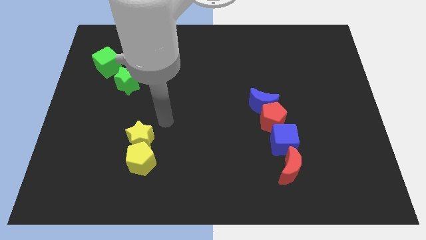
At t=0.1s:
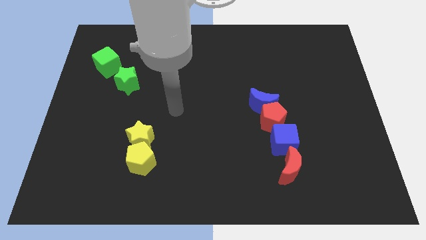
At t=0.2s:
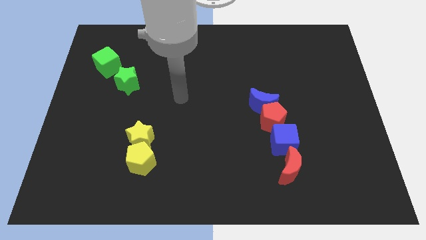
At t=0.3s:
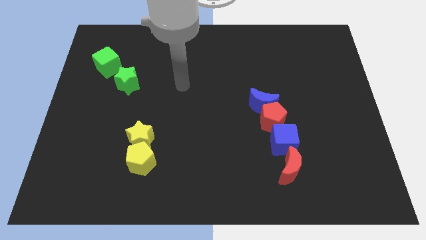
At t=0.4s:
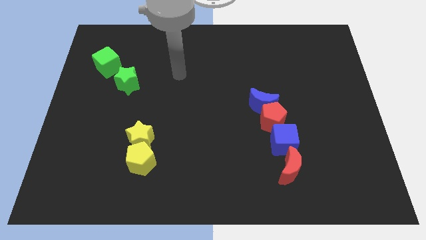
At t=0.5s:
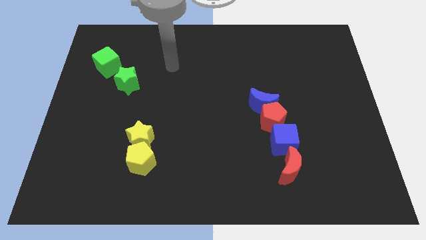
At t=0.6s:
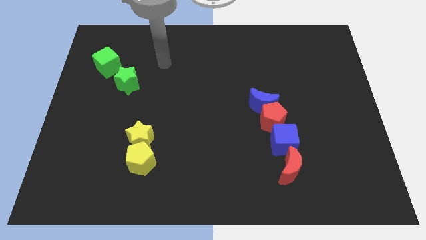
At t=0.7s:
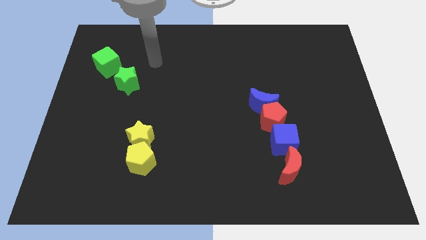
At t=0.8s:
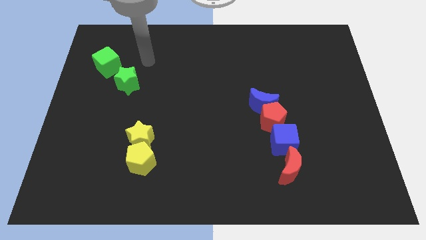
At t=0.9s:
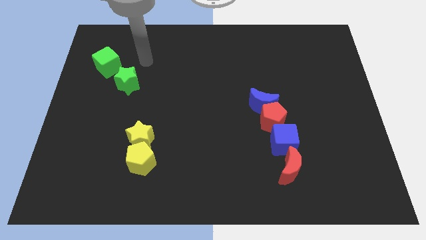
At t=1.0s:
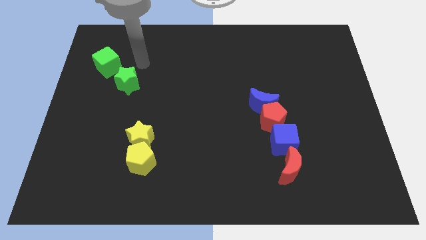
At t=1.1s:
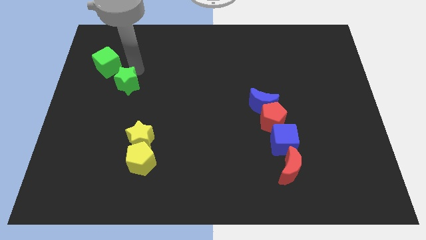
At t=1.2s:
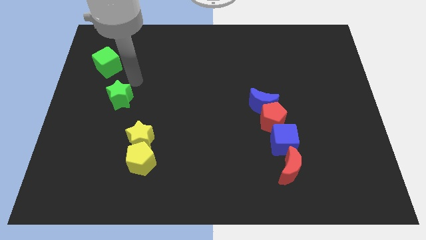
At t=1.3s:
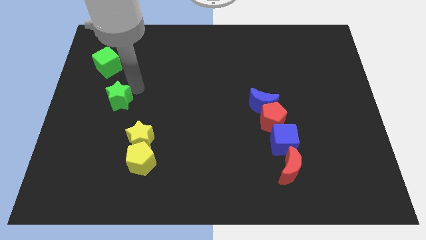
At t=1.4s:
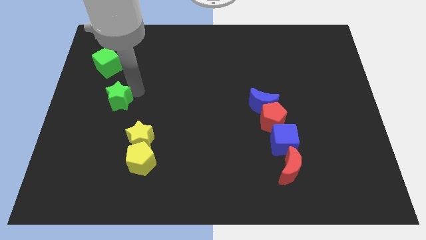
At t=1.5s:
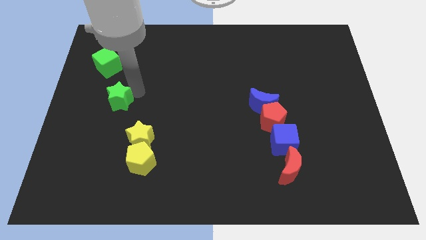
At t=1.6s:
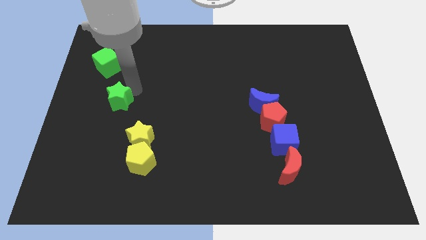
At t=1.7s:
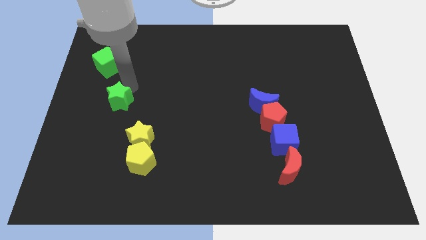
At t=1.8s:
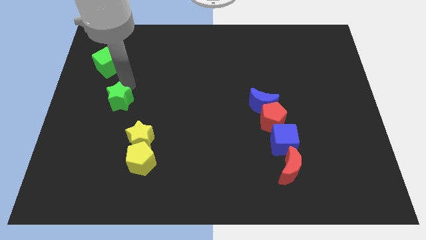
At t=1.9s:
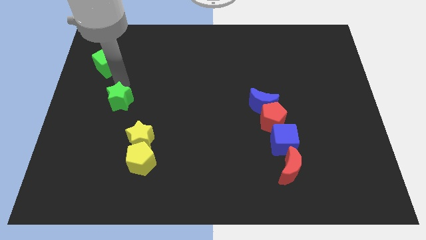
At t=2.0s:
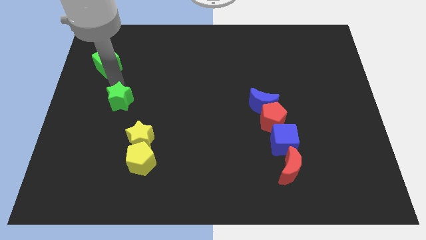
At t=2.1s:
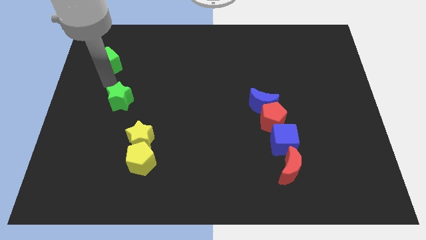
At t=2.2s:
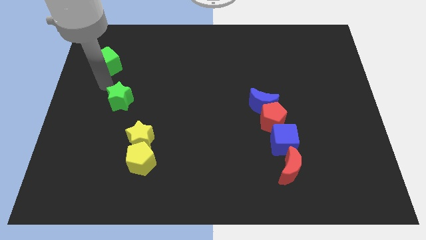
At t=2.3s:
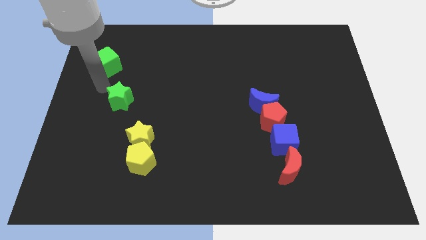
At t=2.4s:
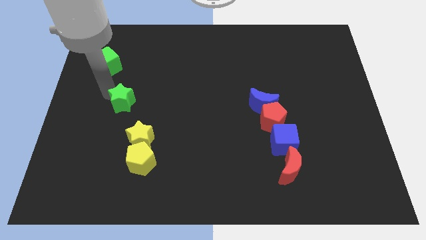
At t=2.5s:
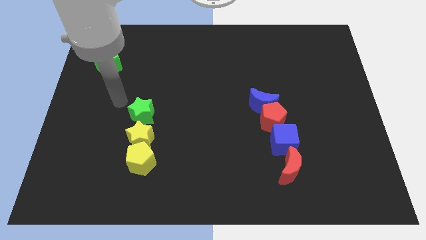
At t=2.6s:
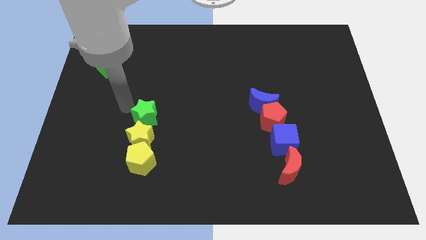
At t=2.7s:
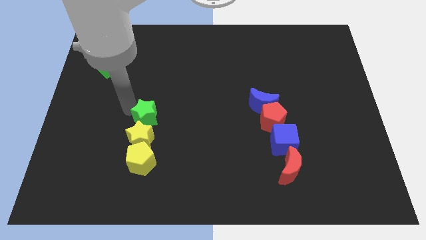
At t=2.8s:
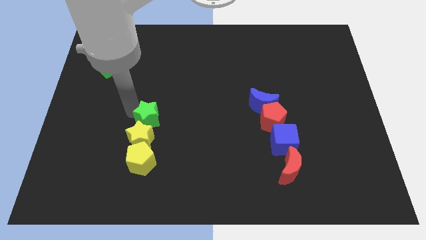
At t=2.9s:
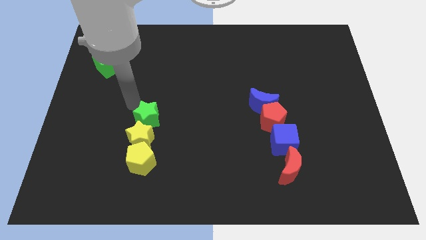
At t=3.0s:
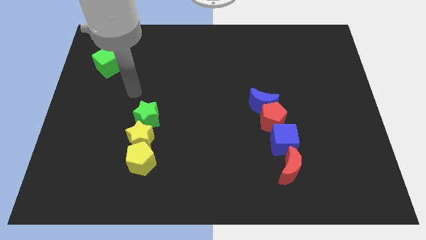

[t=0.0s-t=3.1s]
place the green star above the yellow star

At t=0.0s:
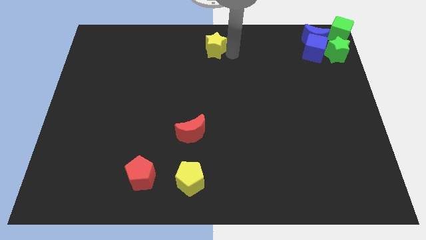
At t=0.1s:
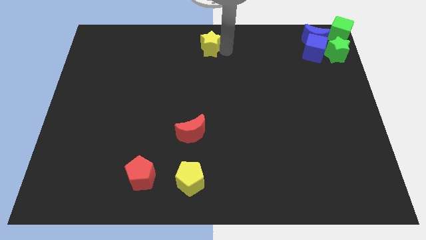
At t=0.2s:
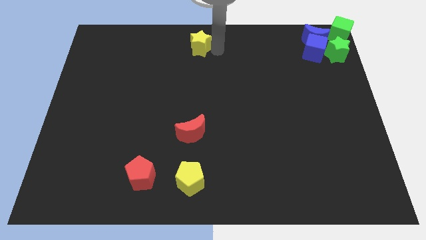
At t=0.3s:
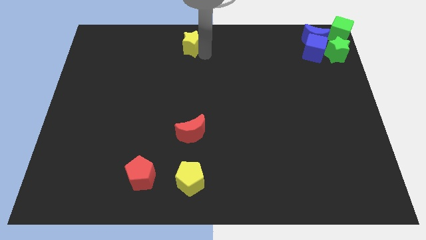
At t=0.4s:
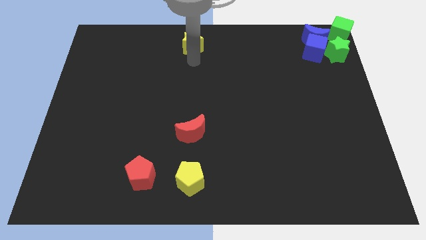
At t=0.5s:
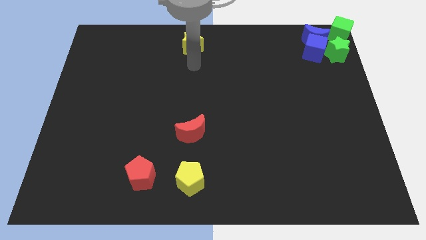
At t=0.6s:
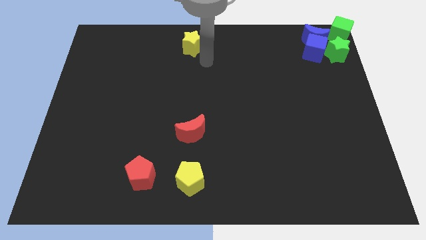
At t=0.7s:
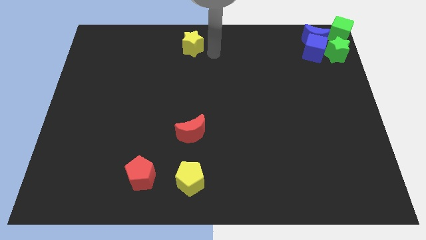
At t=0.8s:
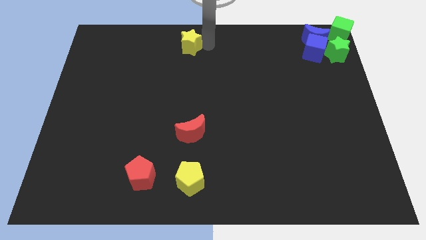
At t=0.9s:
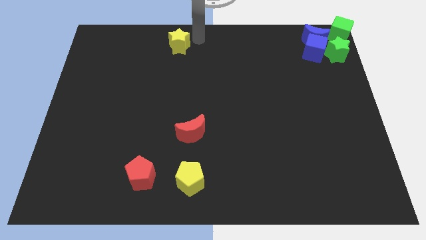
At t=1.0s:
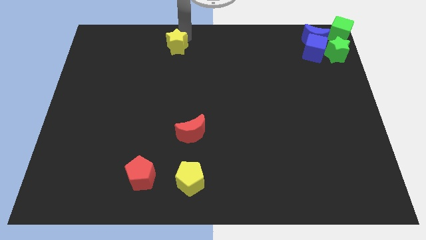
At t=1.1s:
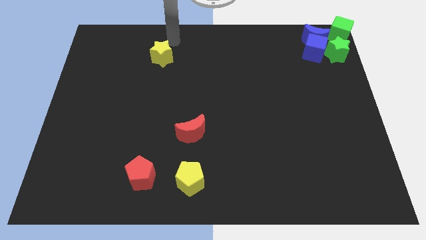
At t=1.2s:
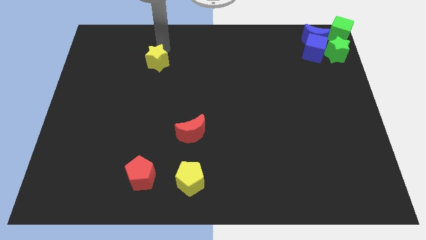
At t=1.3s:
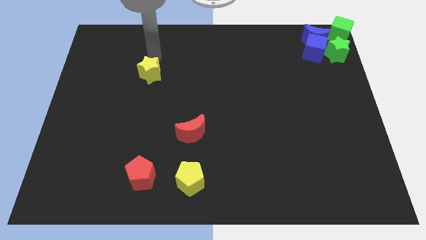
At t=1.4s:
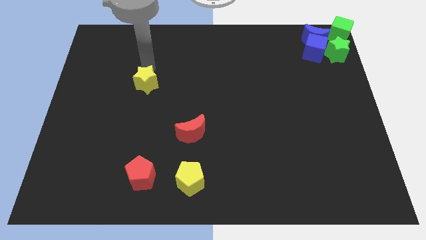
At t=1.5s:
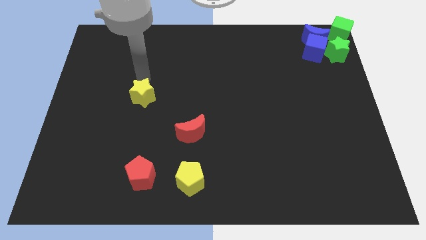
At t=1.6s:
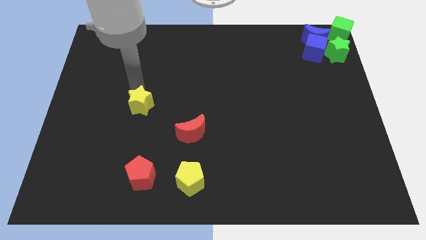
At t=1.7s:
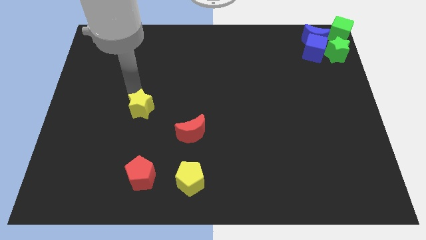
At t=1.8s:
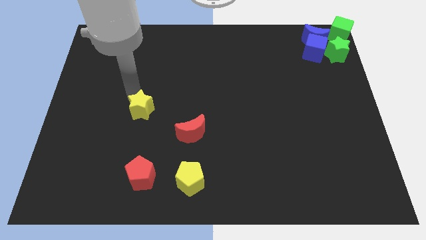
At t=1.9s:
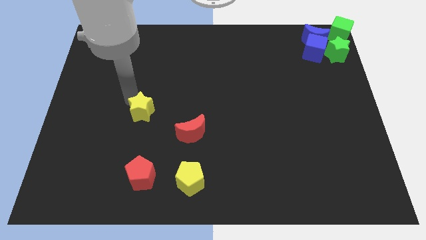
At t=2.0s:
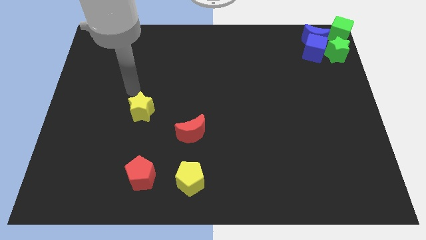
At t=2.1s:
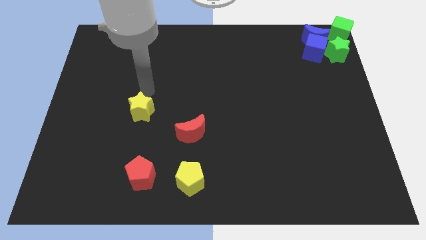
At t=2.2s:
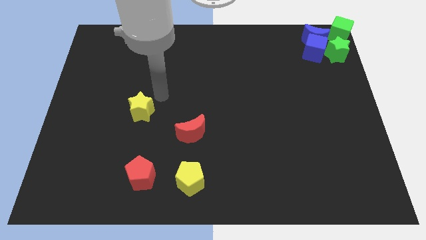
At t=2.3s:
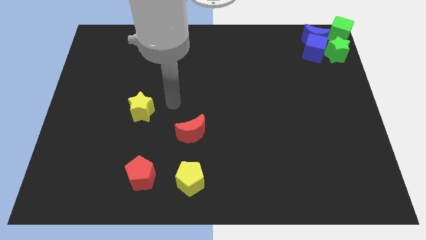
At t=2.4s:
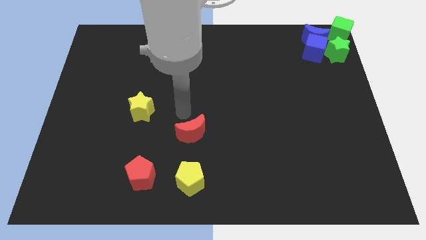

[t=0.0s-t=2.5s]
move the yellow star towards the bottom of the board

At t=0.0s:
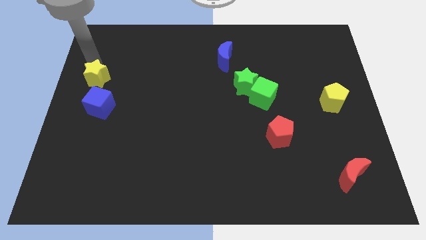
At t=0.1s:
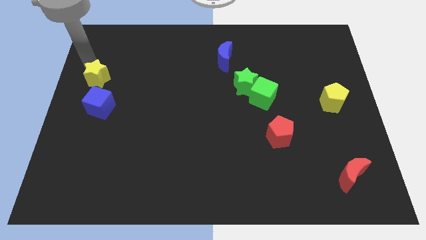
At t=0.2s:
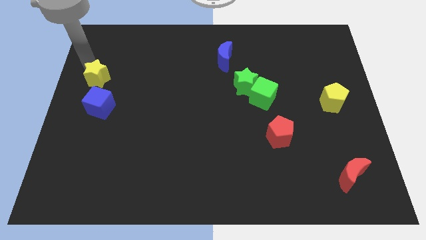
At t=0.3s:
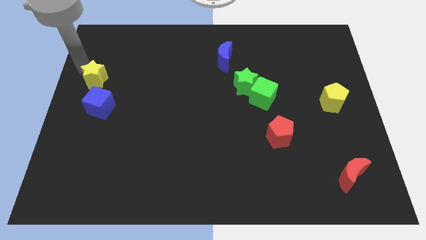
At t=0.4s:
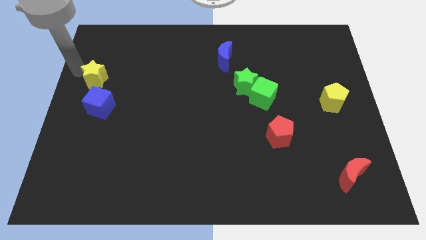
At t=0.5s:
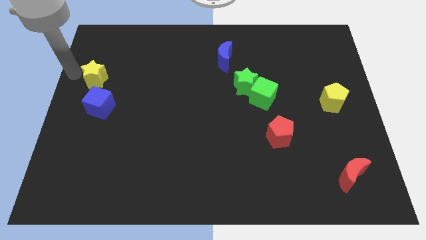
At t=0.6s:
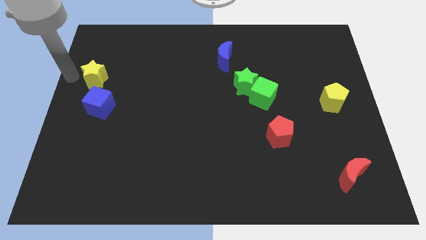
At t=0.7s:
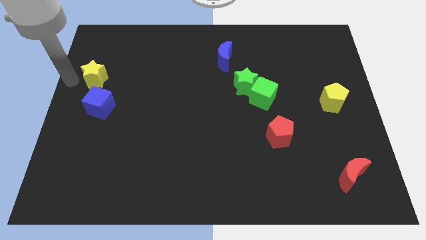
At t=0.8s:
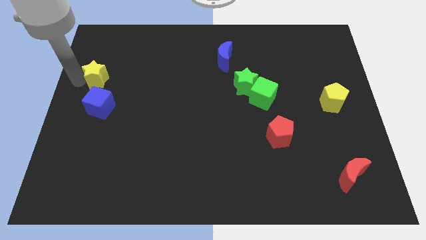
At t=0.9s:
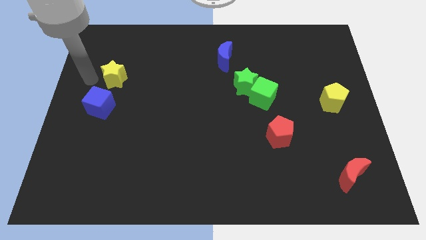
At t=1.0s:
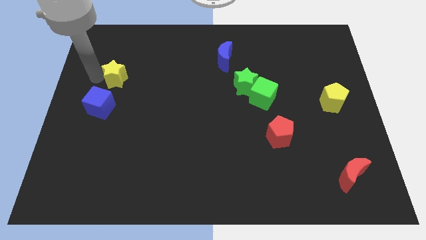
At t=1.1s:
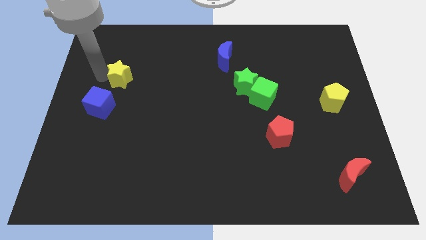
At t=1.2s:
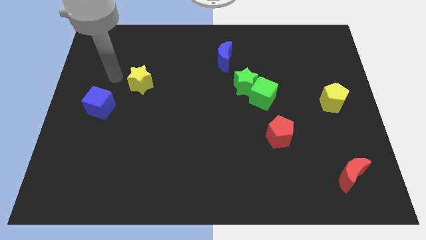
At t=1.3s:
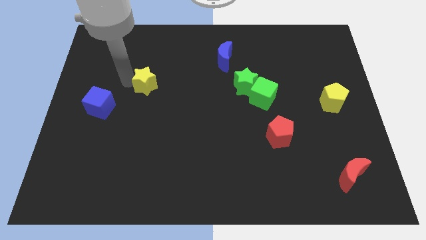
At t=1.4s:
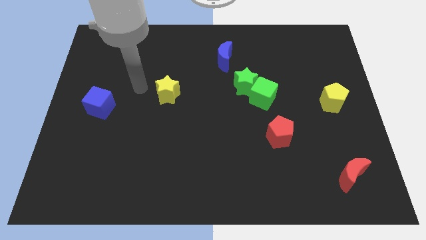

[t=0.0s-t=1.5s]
drag the yellow star diagonally top right to the blue cube

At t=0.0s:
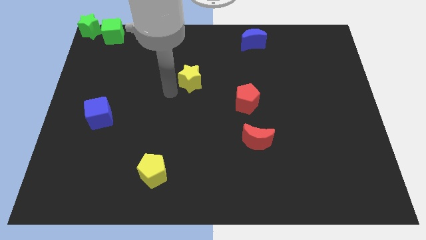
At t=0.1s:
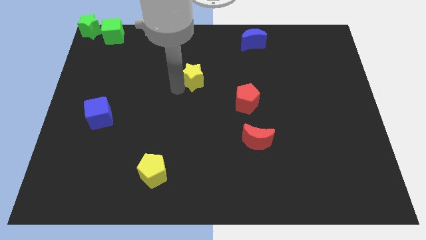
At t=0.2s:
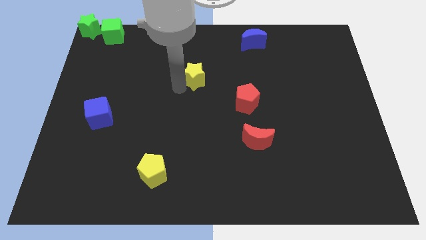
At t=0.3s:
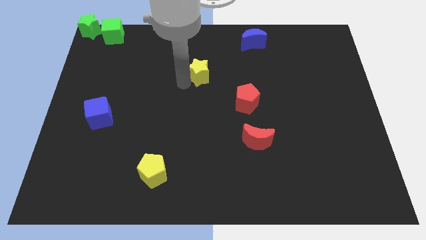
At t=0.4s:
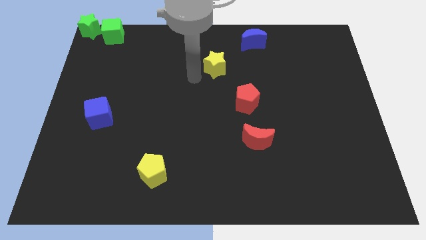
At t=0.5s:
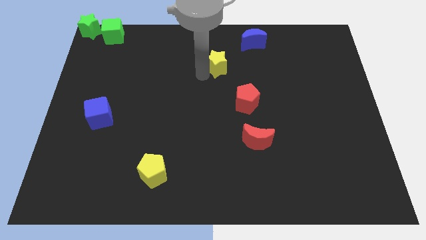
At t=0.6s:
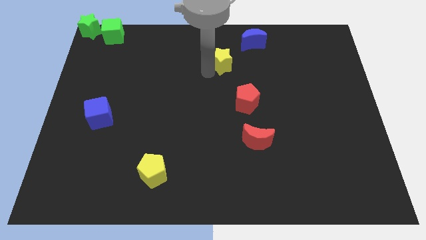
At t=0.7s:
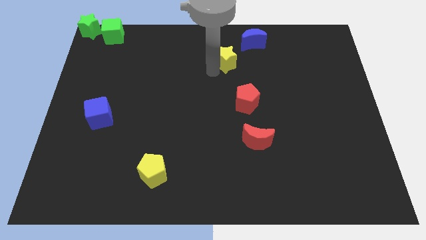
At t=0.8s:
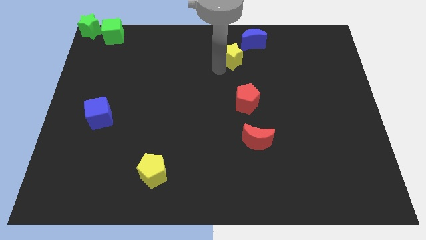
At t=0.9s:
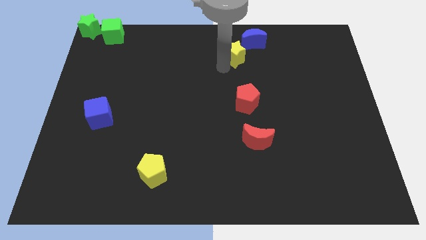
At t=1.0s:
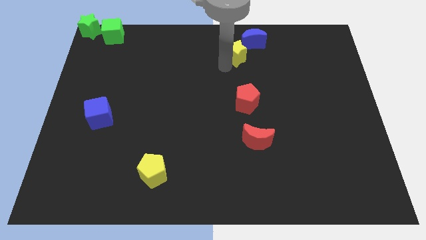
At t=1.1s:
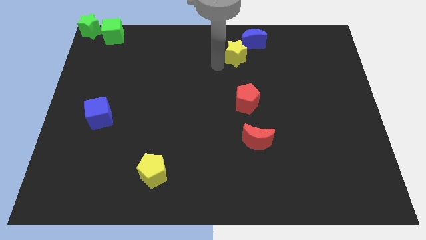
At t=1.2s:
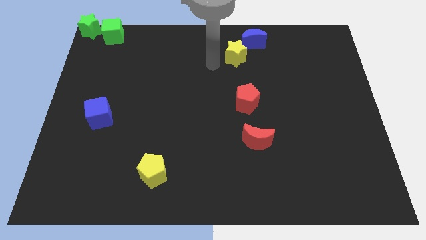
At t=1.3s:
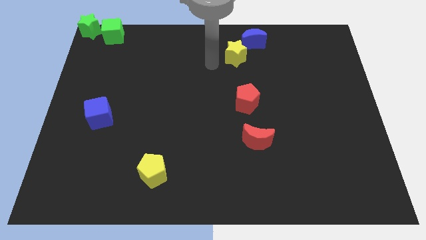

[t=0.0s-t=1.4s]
slide the yellow star diagonally top left to the red pentagon

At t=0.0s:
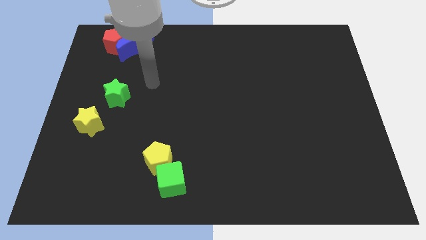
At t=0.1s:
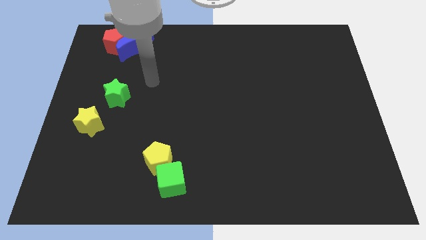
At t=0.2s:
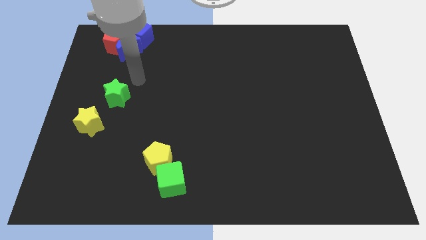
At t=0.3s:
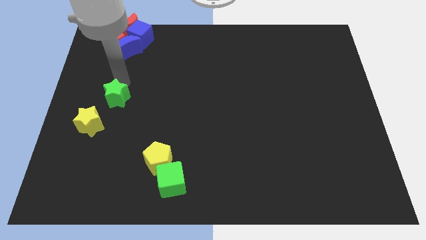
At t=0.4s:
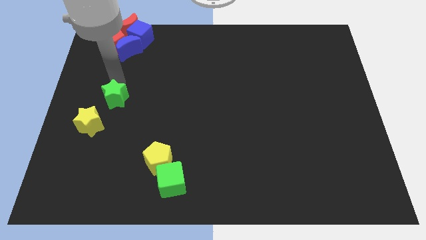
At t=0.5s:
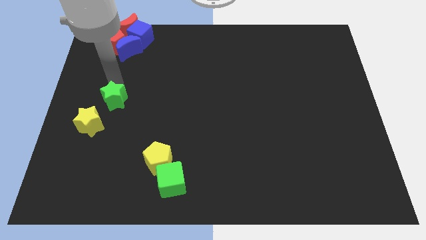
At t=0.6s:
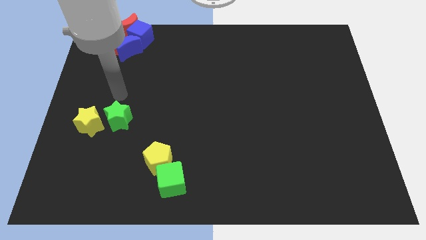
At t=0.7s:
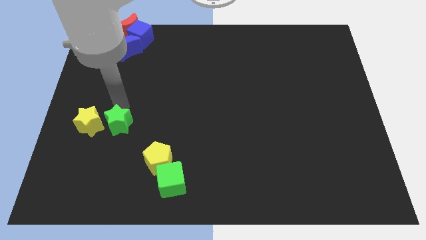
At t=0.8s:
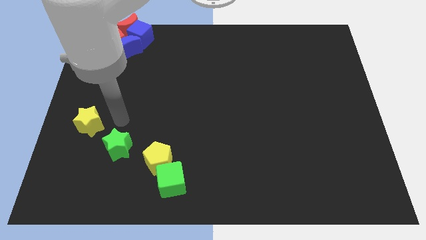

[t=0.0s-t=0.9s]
place the green star in between the yellow star and yellow pentagon
